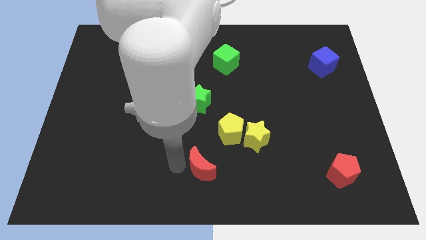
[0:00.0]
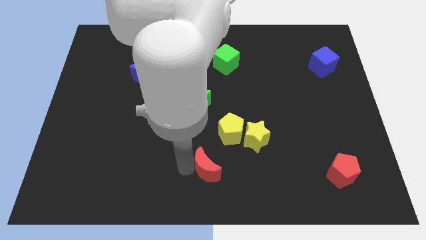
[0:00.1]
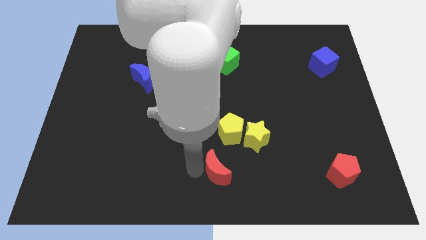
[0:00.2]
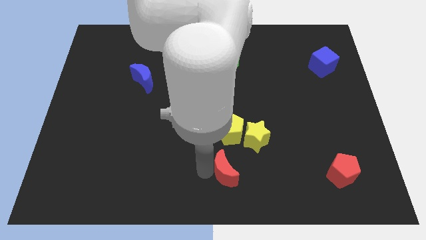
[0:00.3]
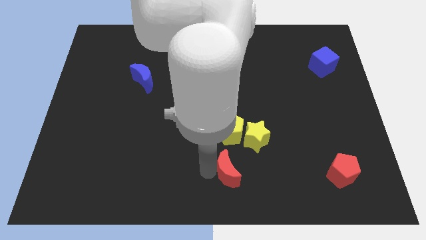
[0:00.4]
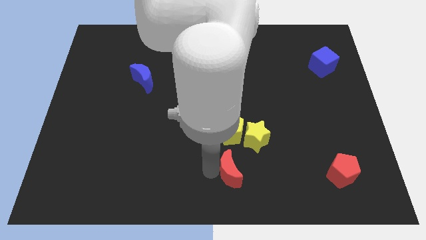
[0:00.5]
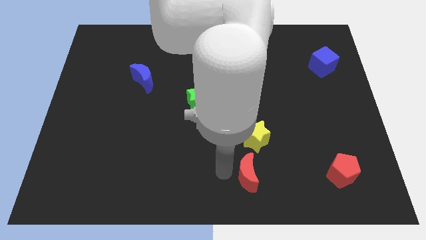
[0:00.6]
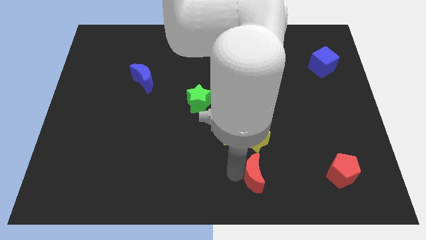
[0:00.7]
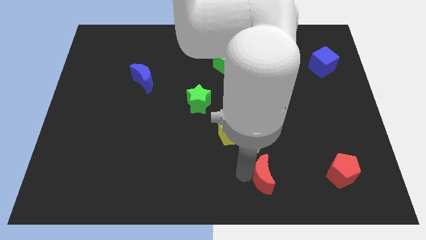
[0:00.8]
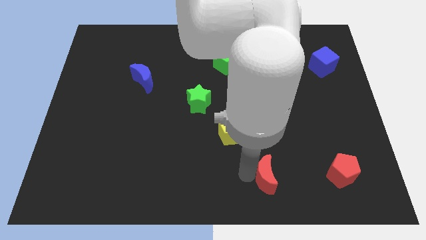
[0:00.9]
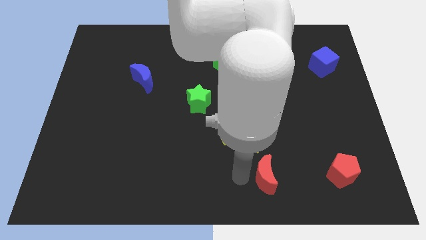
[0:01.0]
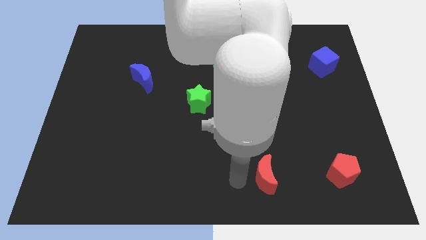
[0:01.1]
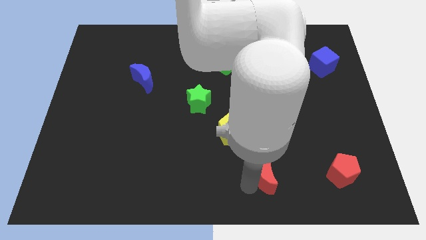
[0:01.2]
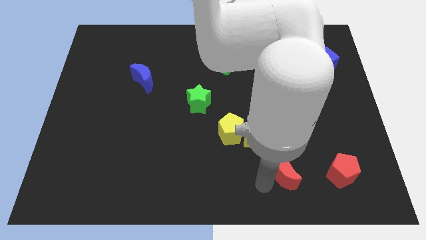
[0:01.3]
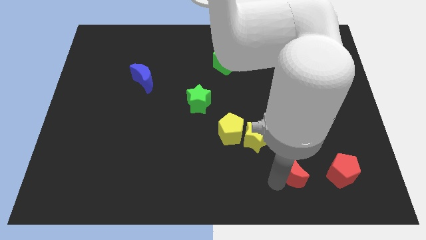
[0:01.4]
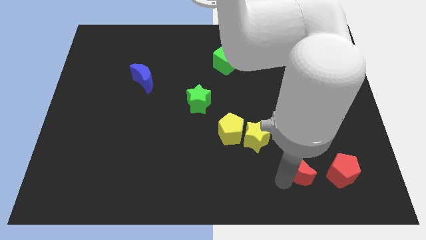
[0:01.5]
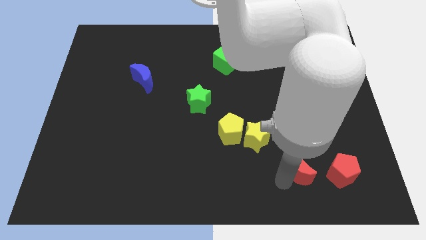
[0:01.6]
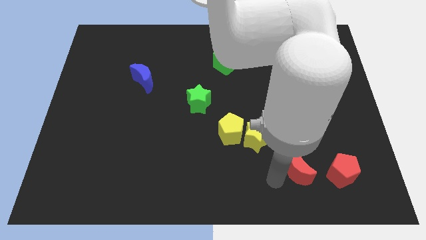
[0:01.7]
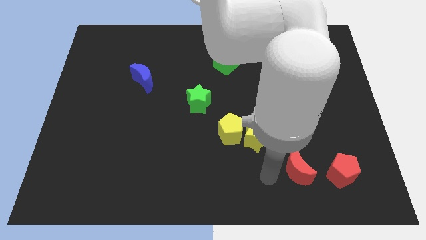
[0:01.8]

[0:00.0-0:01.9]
put the red moon horizontally left to the red pentagon

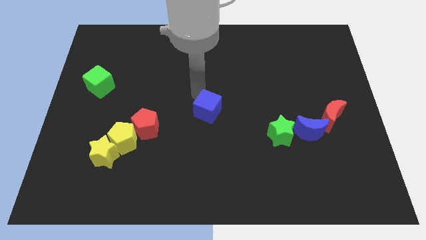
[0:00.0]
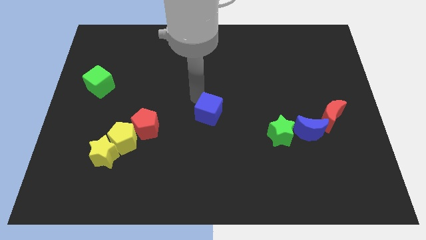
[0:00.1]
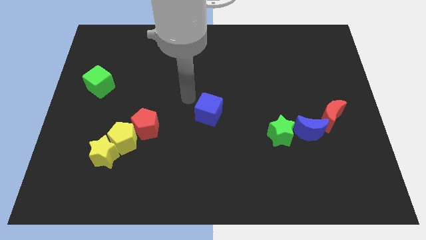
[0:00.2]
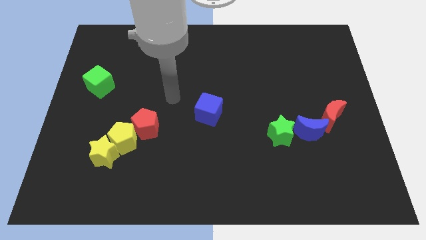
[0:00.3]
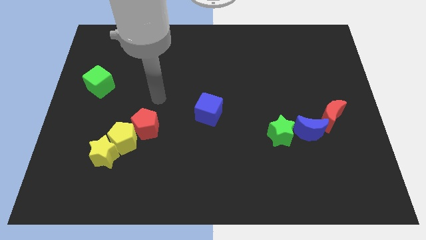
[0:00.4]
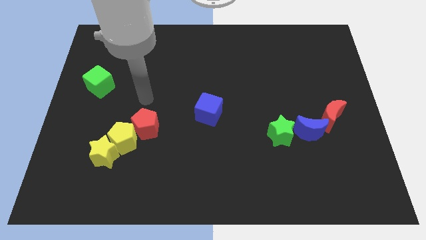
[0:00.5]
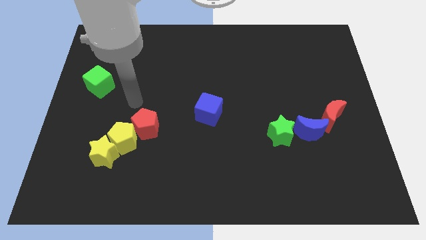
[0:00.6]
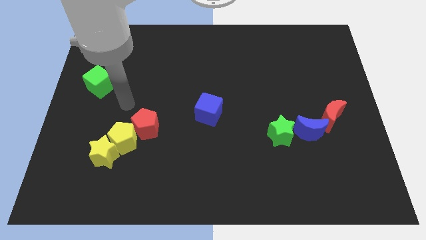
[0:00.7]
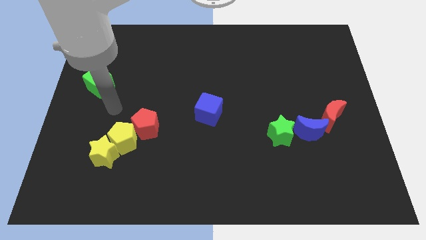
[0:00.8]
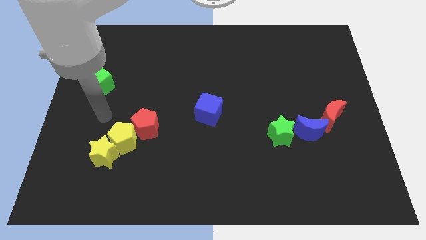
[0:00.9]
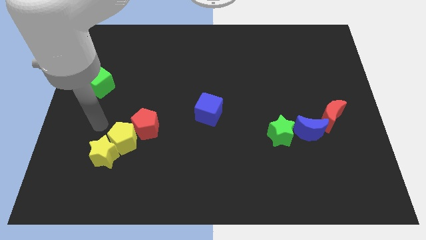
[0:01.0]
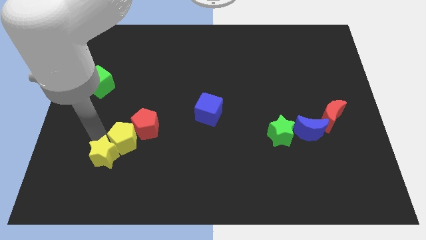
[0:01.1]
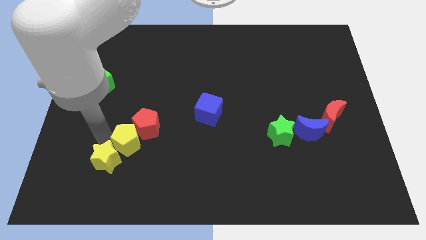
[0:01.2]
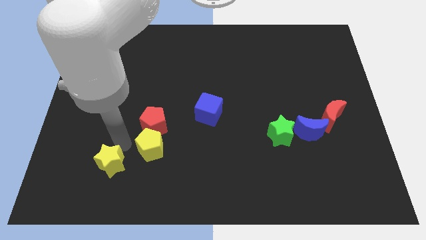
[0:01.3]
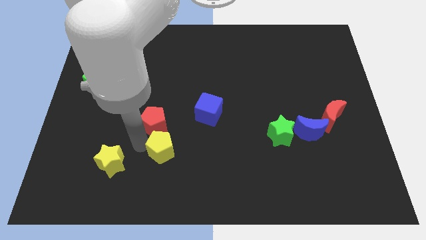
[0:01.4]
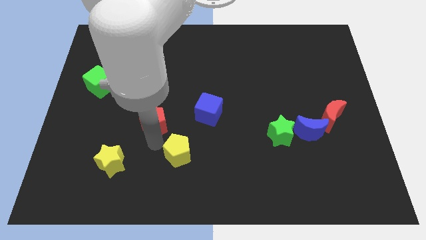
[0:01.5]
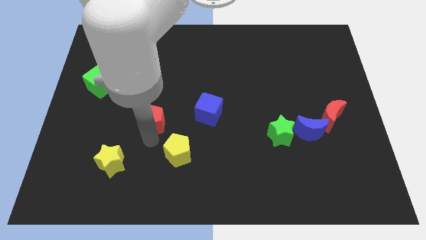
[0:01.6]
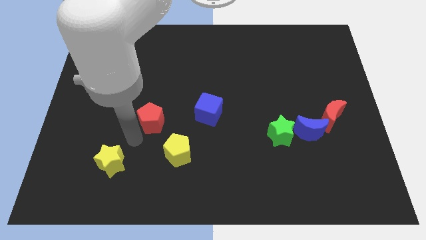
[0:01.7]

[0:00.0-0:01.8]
separate the yellow pentagon from the yellow star

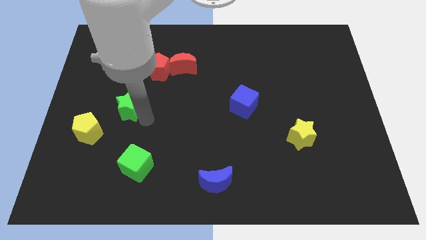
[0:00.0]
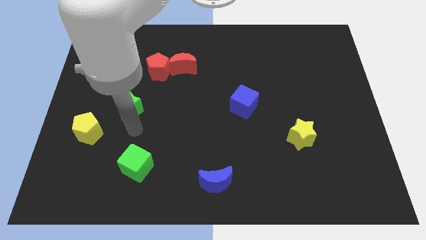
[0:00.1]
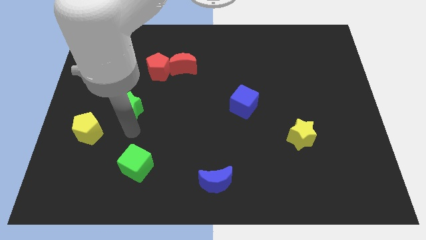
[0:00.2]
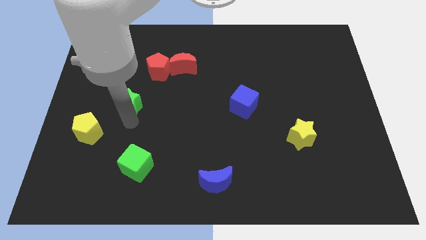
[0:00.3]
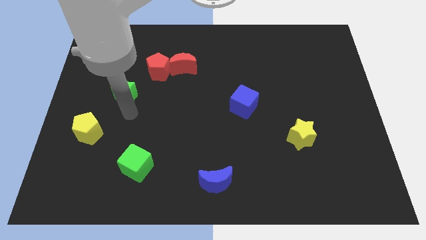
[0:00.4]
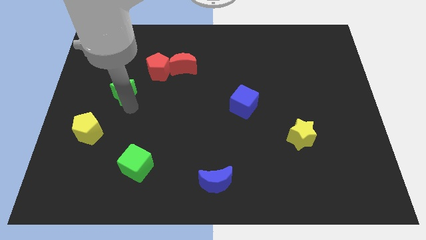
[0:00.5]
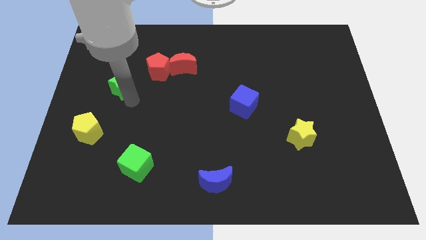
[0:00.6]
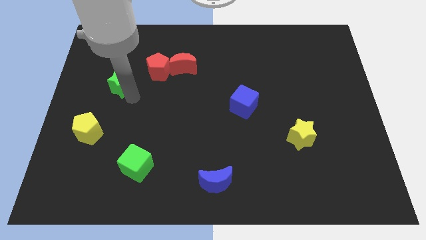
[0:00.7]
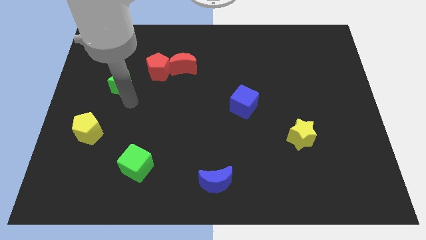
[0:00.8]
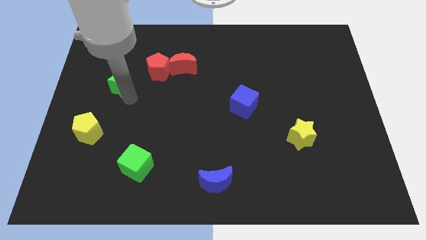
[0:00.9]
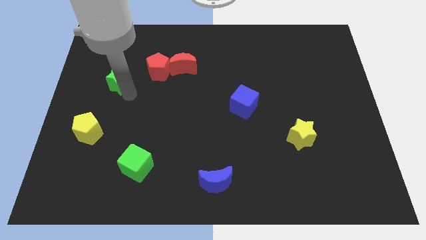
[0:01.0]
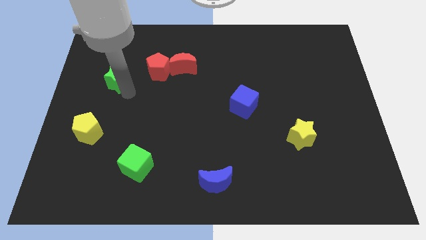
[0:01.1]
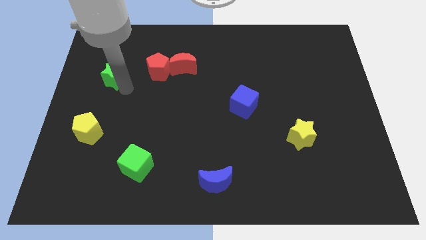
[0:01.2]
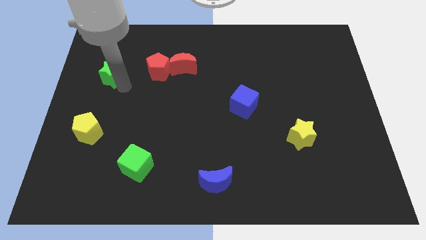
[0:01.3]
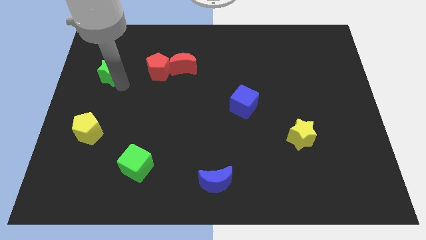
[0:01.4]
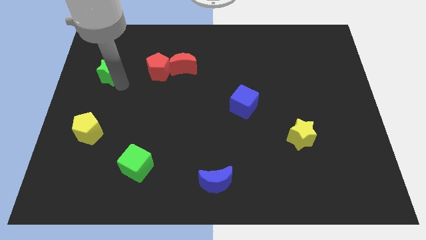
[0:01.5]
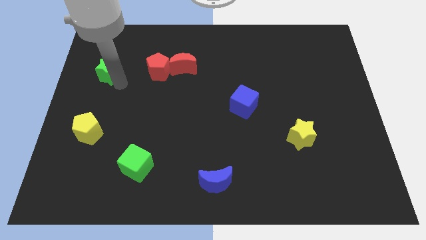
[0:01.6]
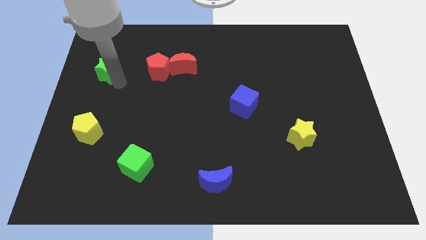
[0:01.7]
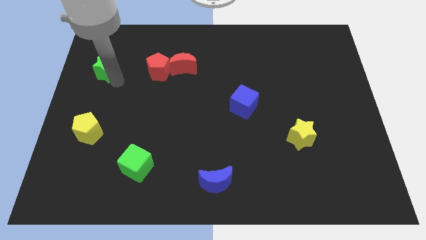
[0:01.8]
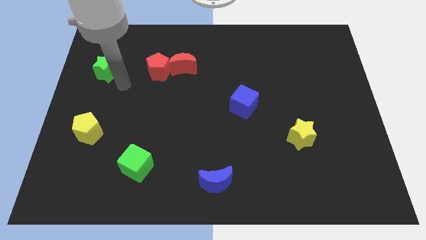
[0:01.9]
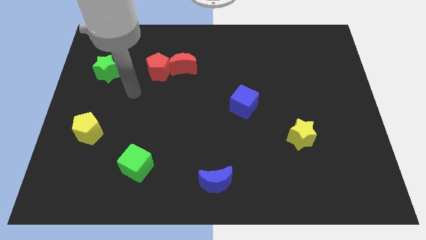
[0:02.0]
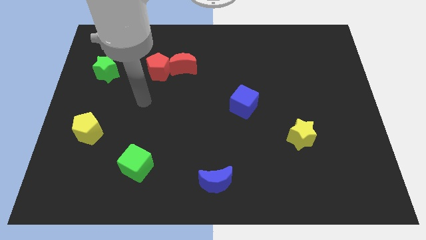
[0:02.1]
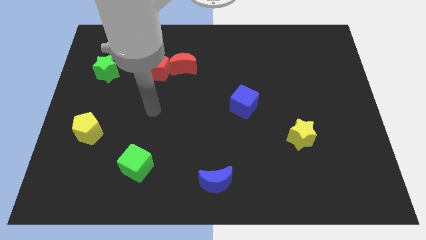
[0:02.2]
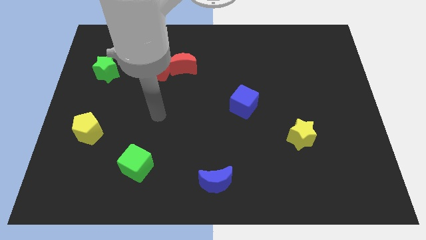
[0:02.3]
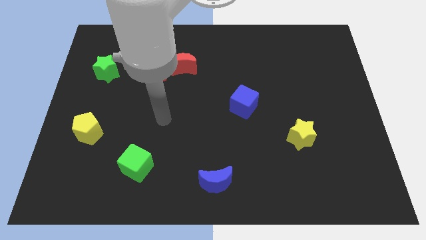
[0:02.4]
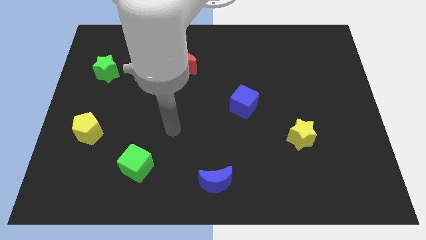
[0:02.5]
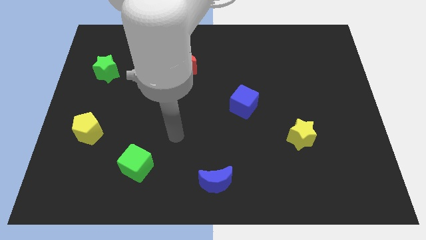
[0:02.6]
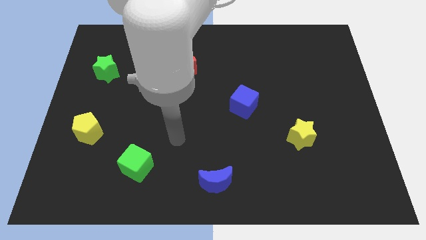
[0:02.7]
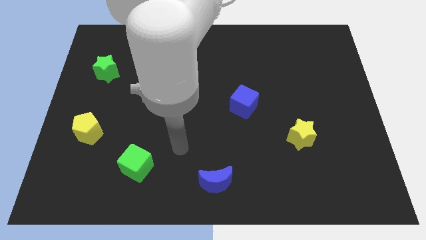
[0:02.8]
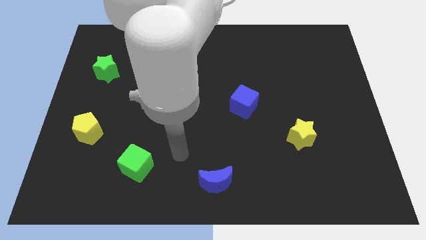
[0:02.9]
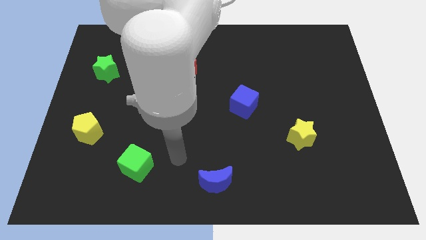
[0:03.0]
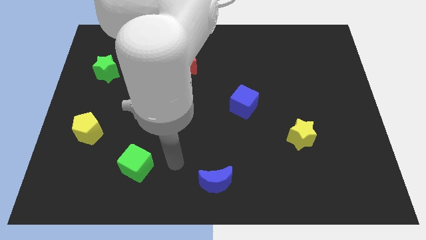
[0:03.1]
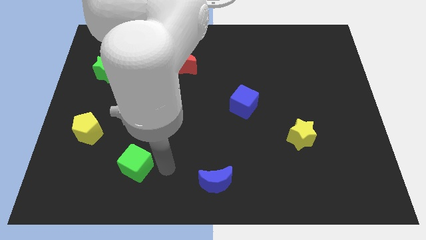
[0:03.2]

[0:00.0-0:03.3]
push the green star to the left side of the red pentagon

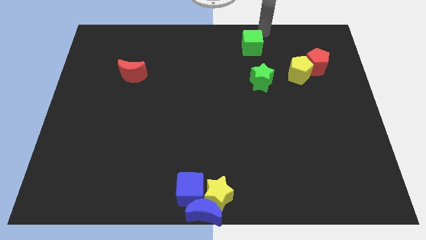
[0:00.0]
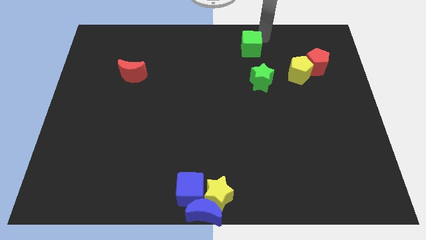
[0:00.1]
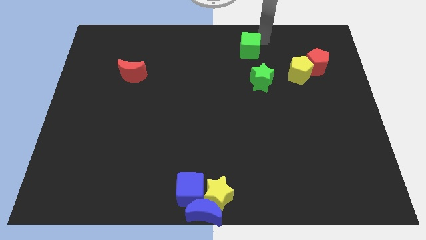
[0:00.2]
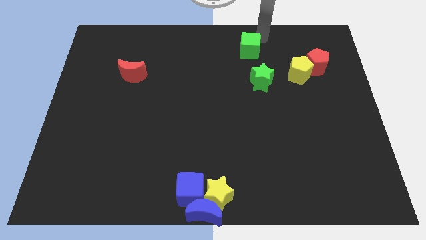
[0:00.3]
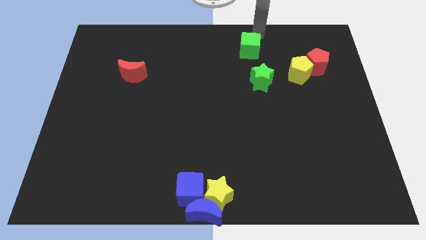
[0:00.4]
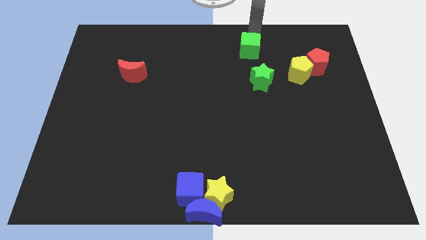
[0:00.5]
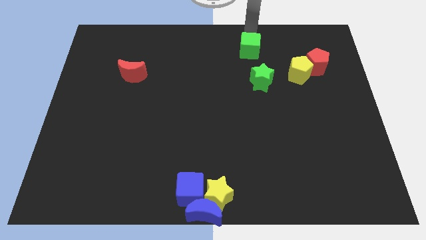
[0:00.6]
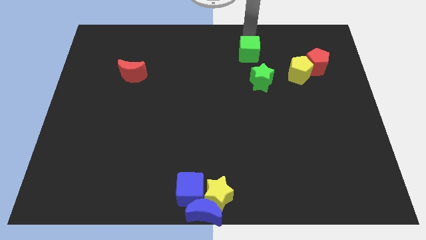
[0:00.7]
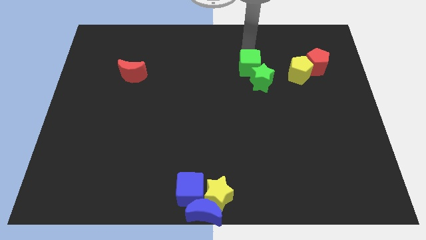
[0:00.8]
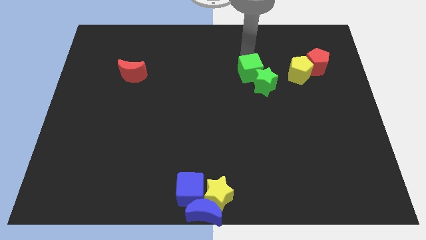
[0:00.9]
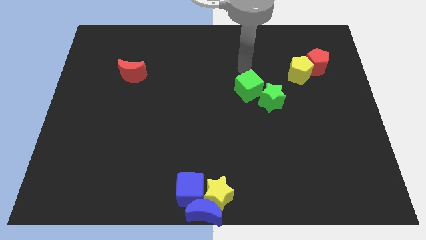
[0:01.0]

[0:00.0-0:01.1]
push the green cube into green star

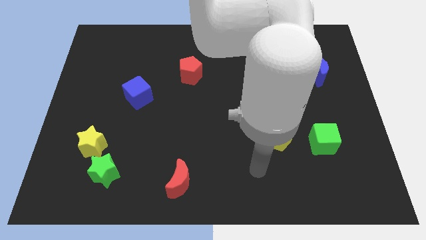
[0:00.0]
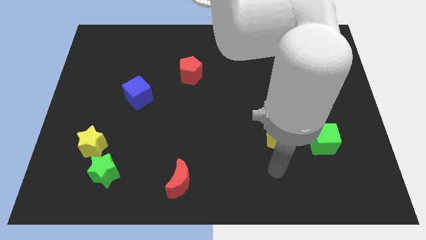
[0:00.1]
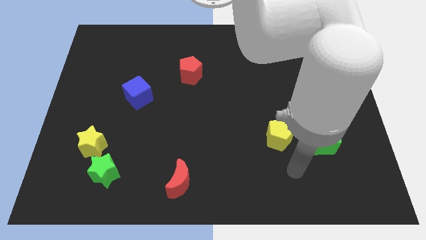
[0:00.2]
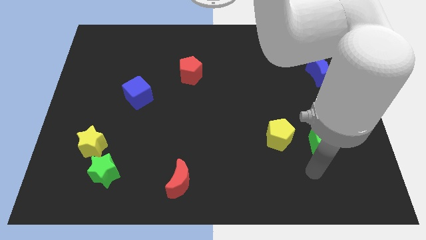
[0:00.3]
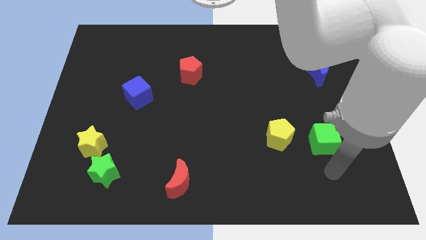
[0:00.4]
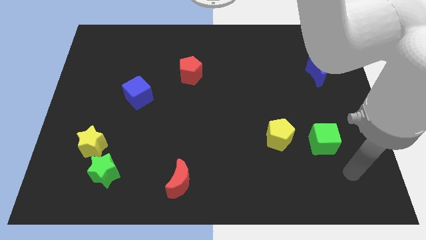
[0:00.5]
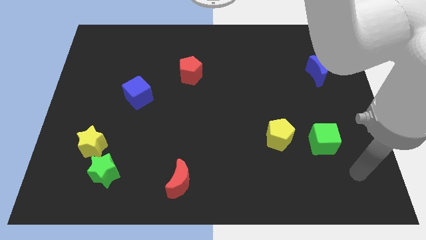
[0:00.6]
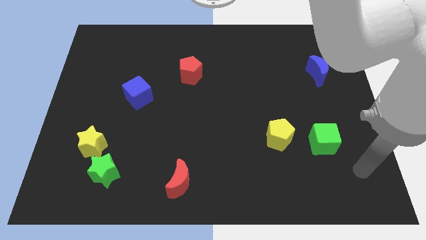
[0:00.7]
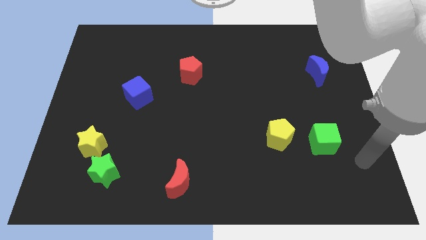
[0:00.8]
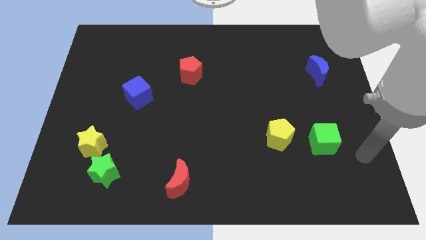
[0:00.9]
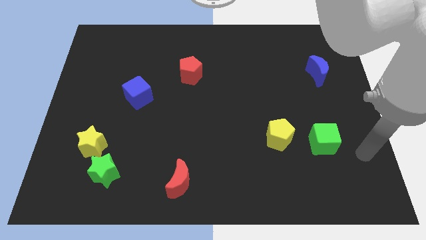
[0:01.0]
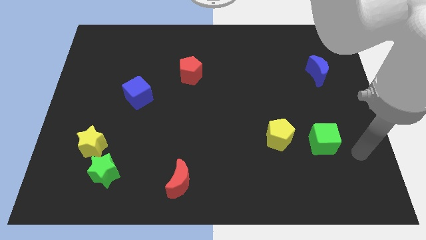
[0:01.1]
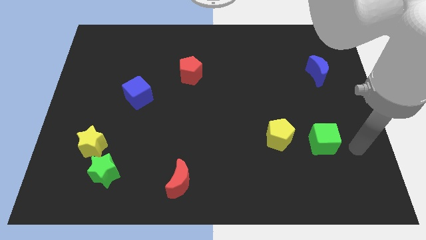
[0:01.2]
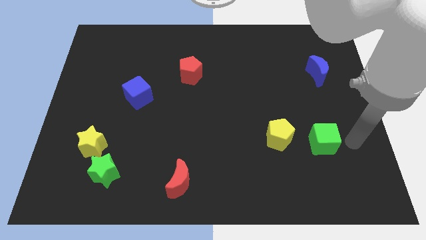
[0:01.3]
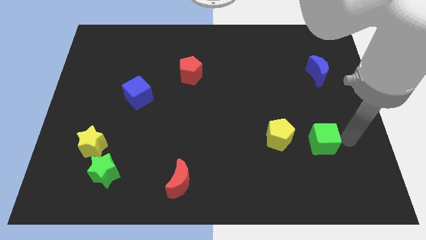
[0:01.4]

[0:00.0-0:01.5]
place your arm at the right of the green cube
